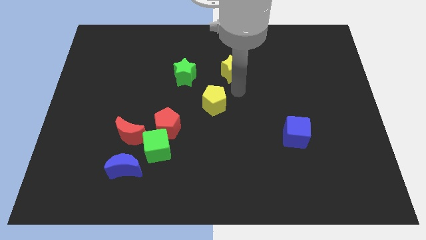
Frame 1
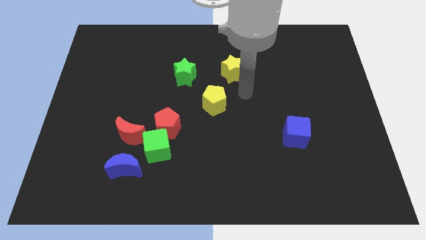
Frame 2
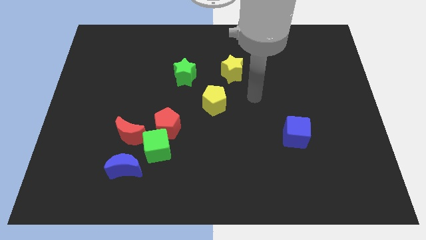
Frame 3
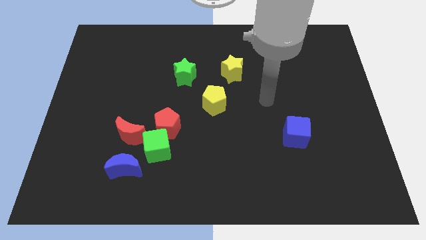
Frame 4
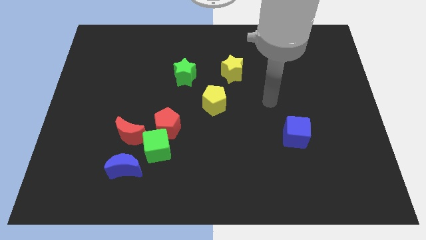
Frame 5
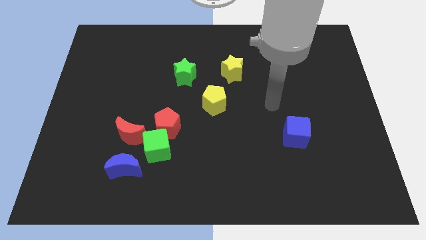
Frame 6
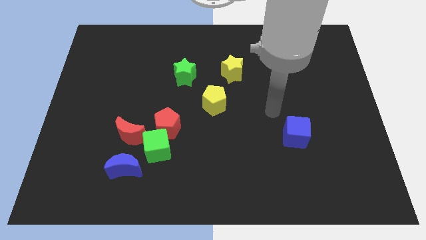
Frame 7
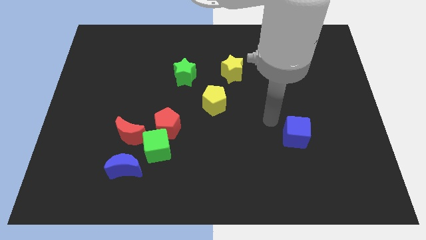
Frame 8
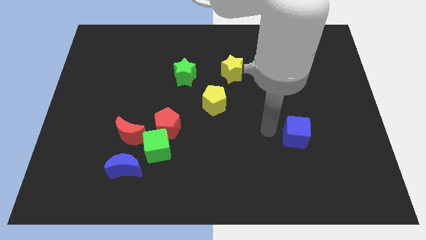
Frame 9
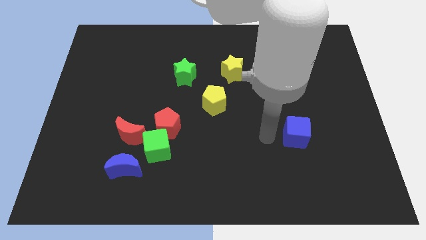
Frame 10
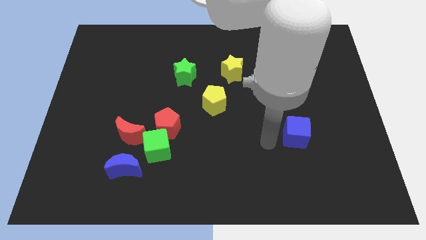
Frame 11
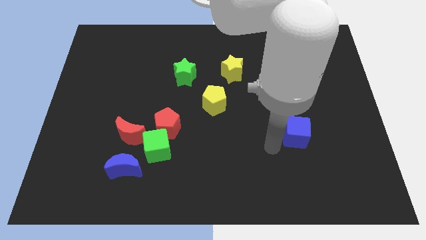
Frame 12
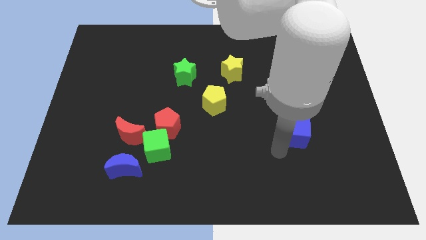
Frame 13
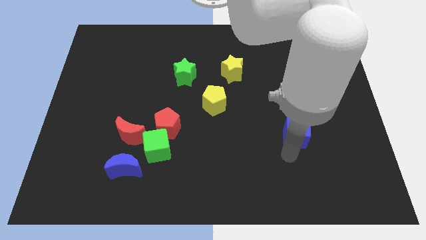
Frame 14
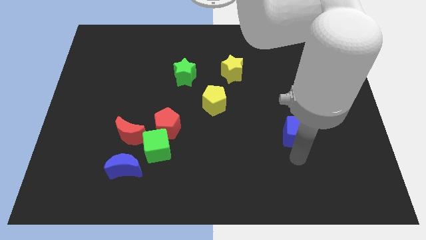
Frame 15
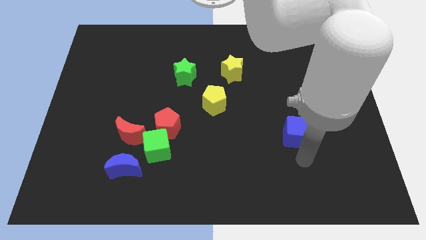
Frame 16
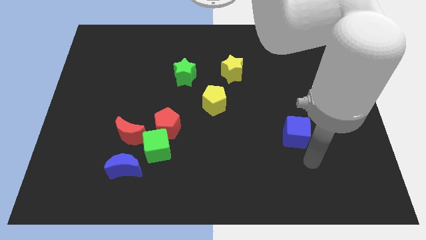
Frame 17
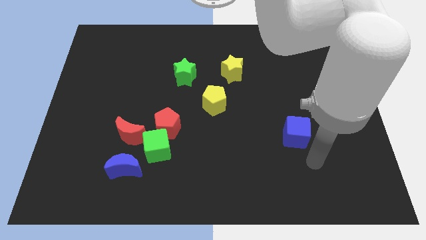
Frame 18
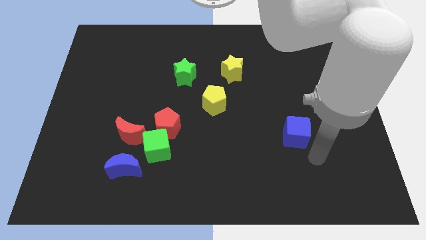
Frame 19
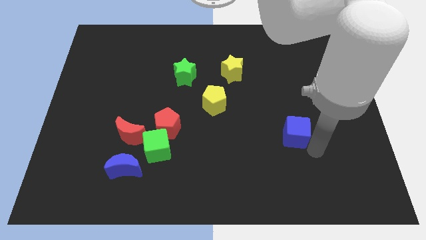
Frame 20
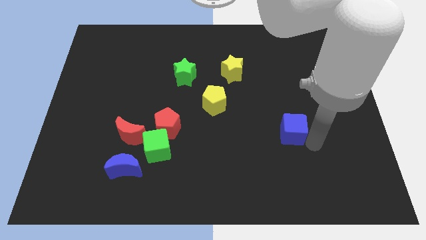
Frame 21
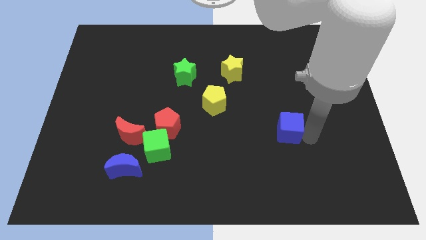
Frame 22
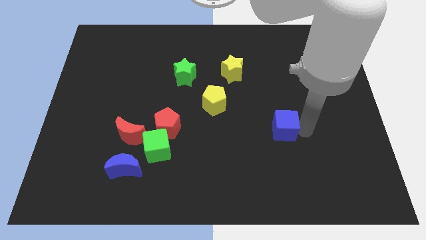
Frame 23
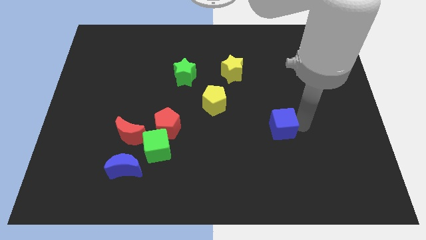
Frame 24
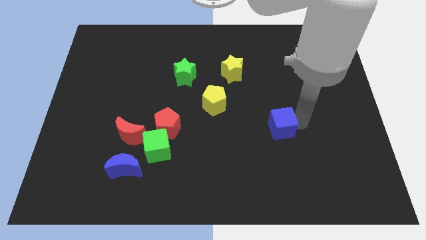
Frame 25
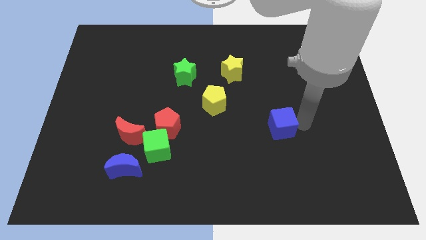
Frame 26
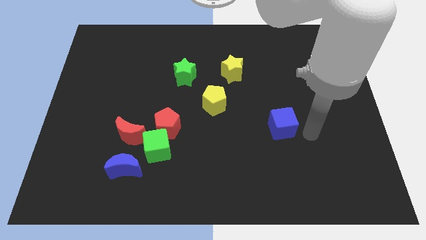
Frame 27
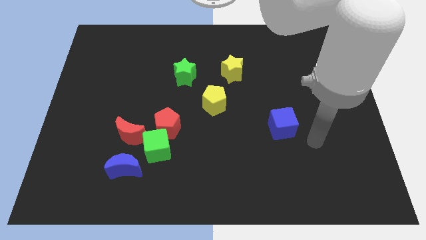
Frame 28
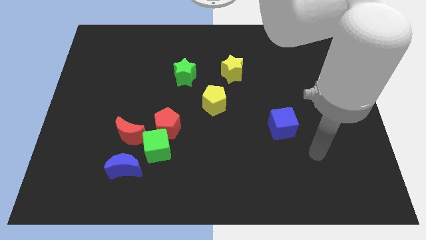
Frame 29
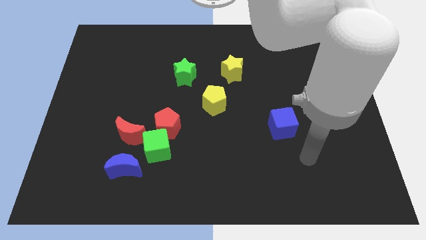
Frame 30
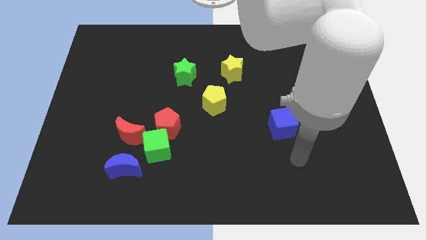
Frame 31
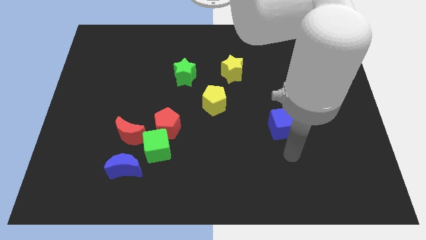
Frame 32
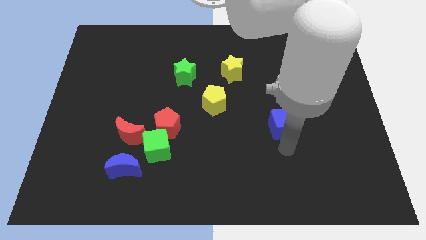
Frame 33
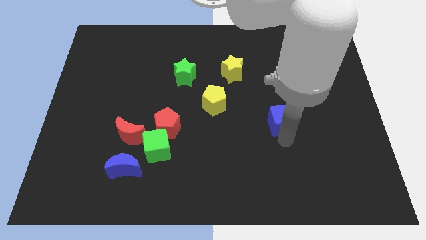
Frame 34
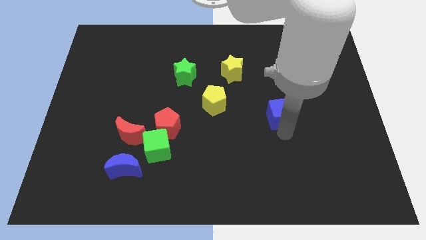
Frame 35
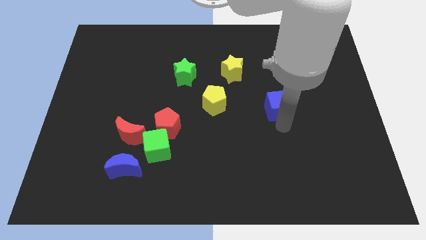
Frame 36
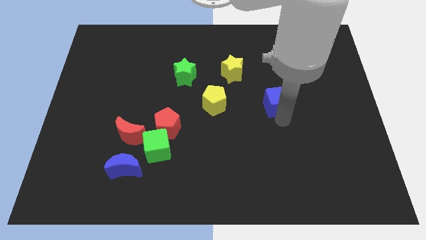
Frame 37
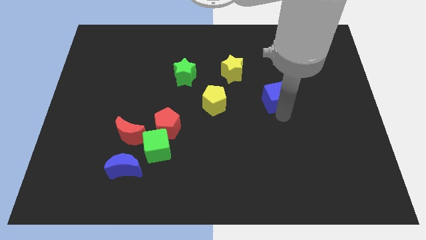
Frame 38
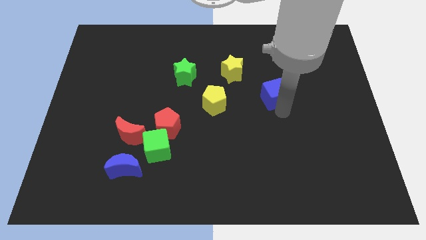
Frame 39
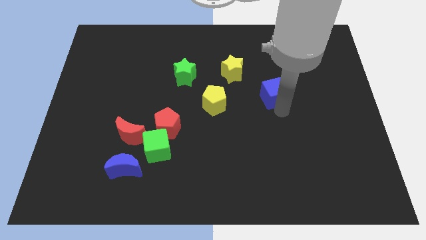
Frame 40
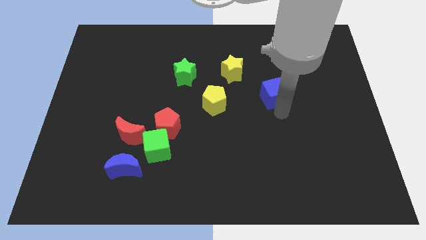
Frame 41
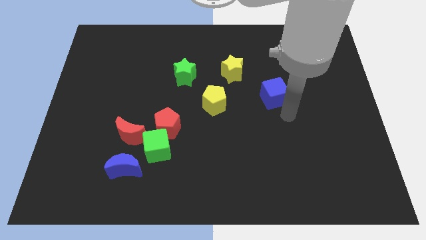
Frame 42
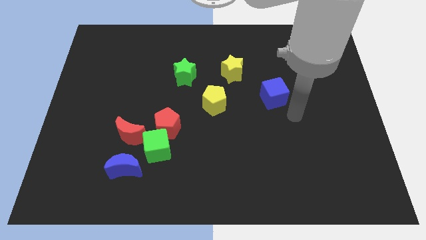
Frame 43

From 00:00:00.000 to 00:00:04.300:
place the blue cube right to the yellow pentagon

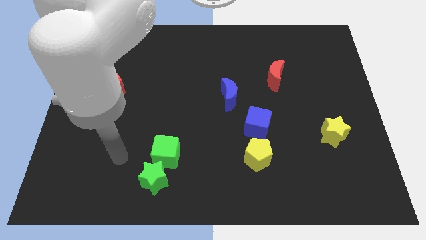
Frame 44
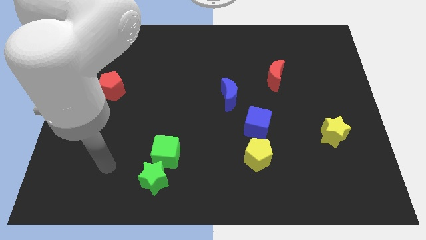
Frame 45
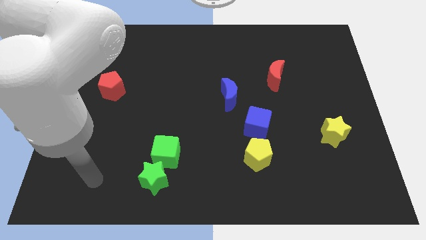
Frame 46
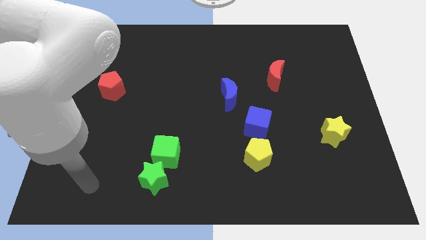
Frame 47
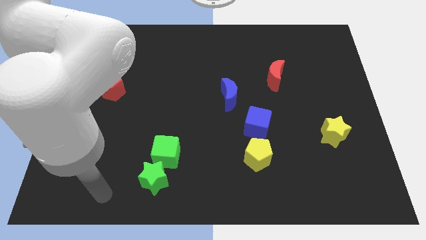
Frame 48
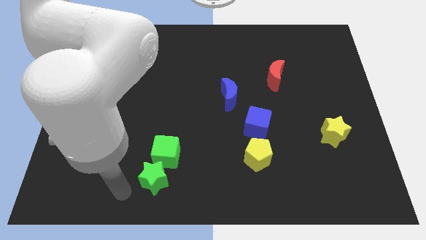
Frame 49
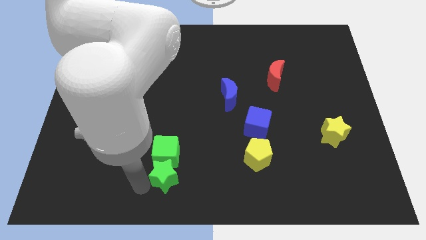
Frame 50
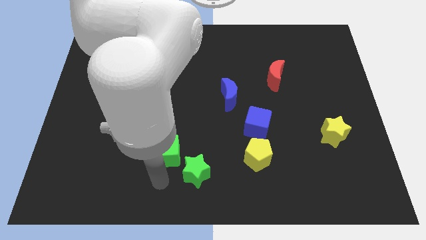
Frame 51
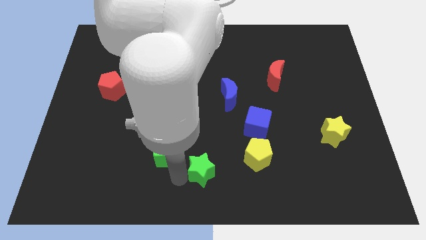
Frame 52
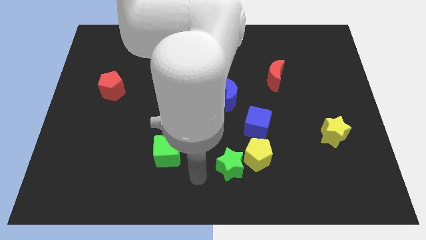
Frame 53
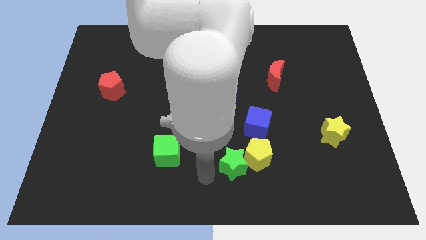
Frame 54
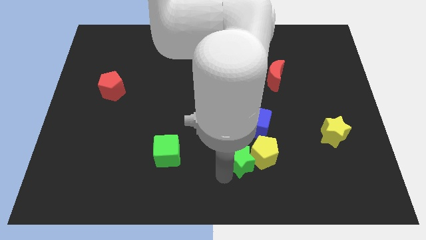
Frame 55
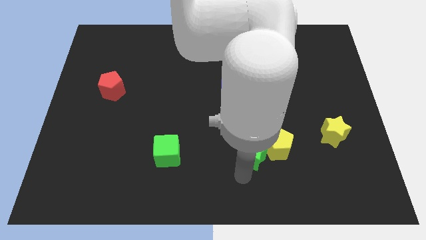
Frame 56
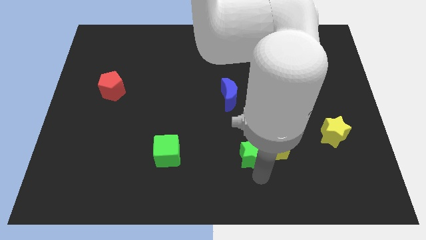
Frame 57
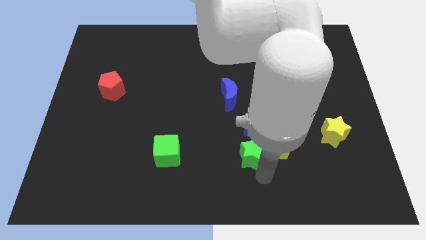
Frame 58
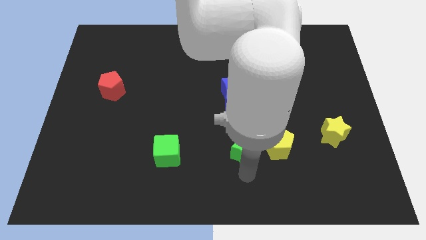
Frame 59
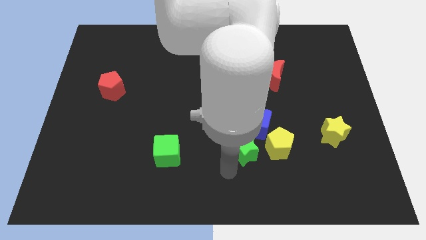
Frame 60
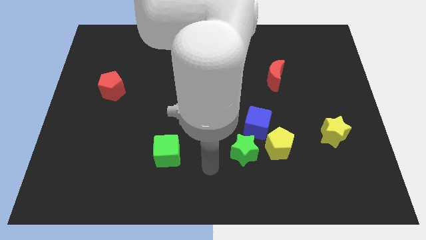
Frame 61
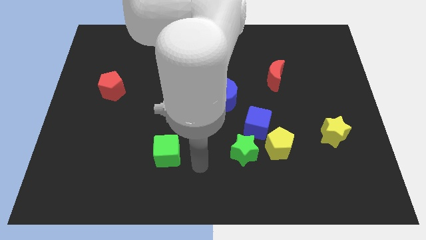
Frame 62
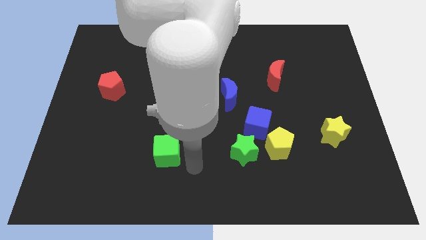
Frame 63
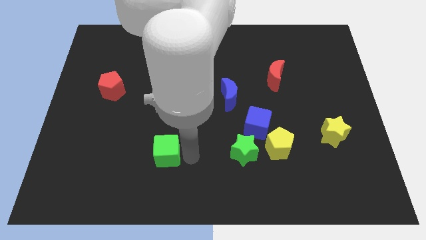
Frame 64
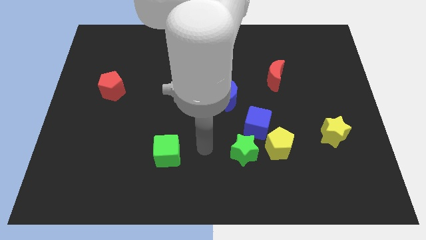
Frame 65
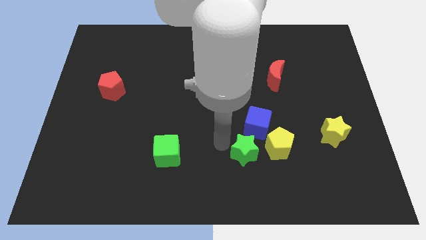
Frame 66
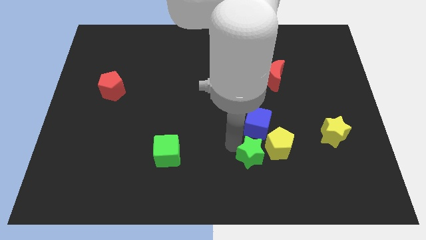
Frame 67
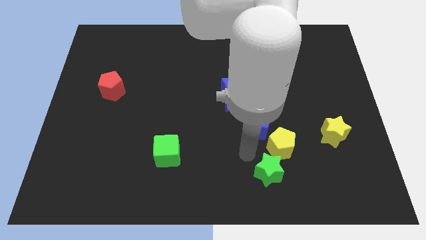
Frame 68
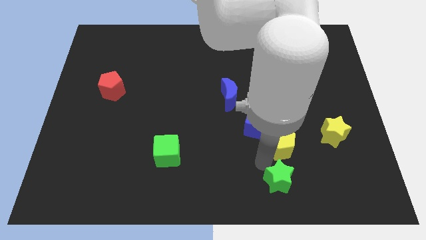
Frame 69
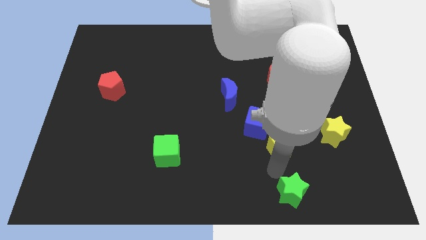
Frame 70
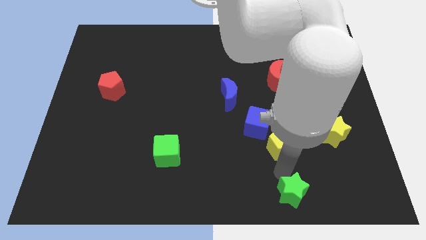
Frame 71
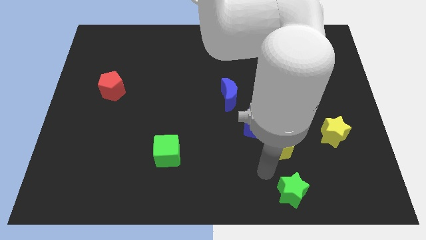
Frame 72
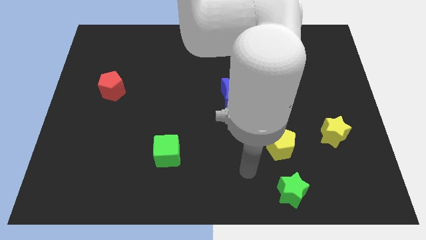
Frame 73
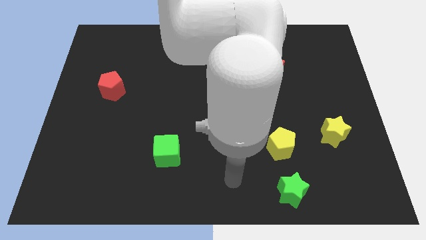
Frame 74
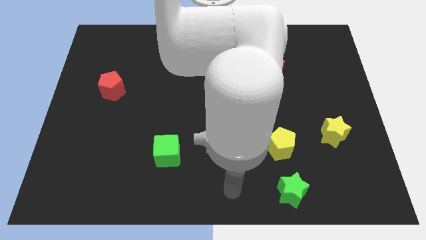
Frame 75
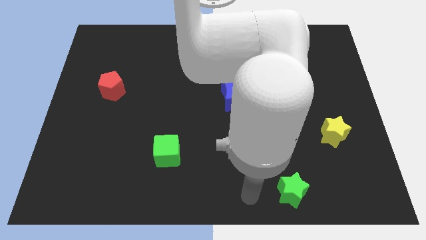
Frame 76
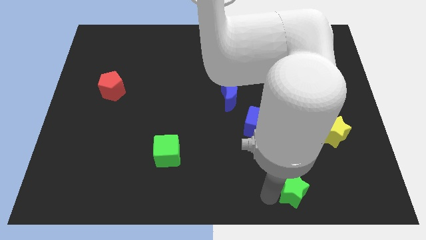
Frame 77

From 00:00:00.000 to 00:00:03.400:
move the green star towards bottom right side of the board

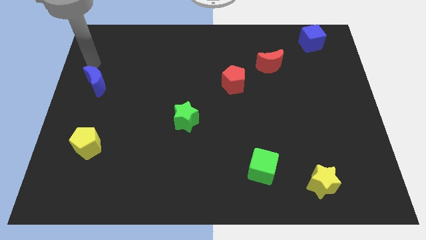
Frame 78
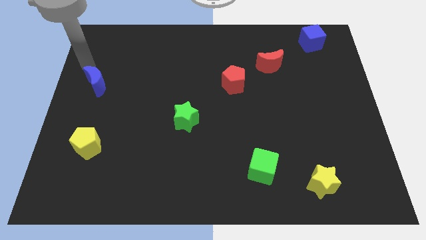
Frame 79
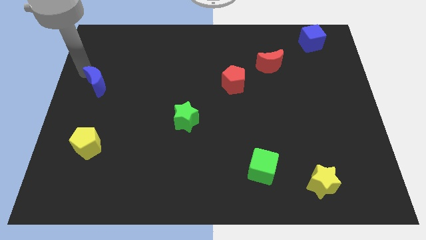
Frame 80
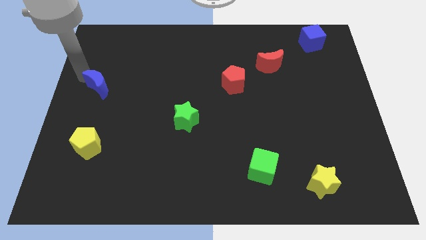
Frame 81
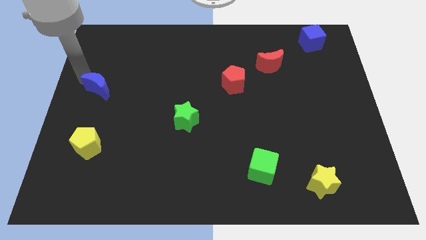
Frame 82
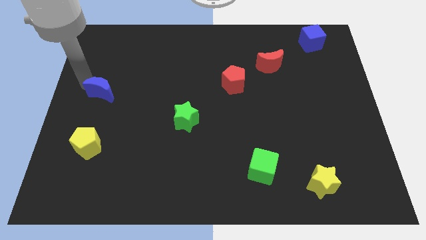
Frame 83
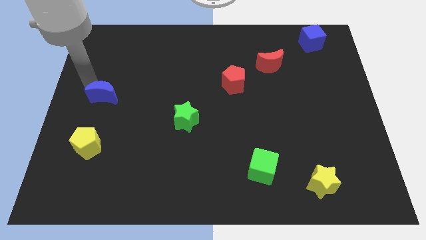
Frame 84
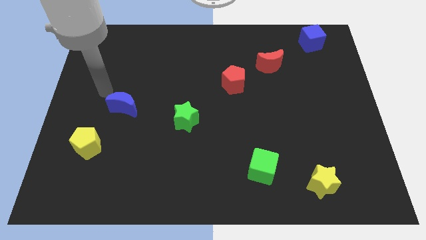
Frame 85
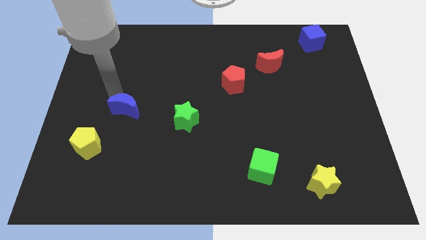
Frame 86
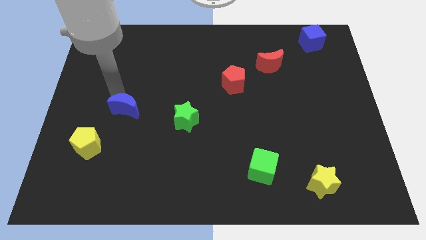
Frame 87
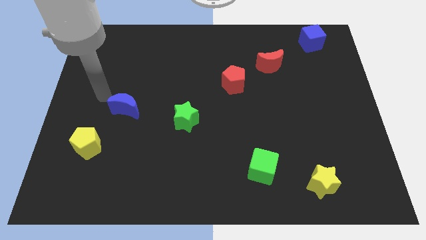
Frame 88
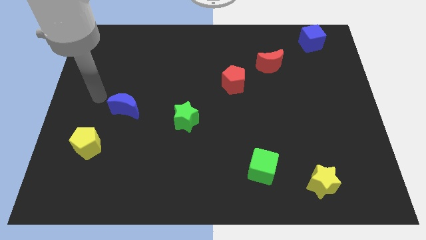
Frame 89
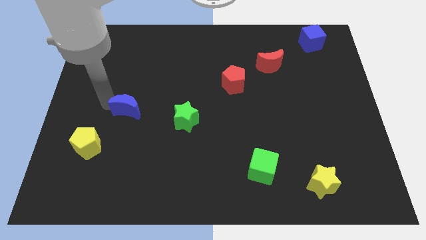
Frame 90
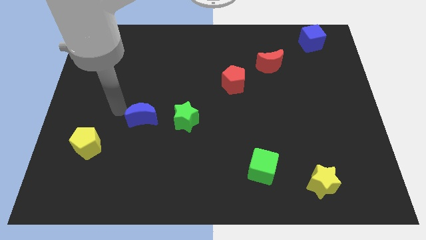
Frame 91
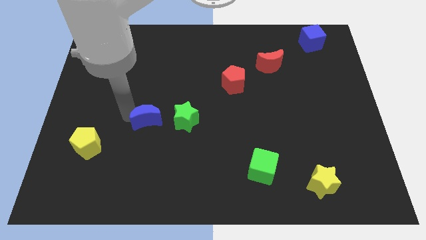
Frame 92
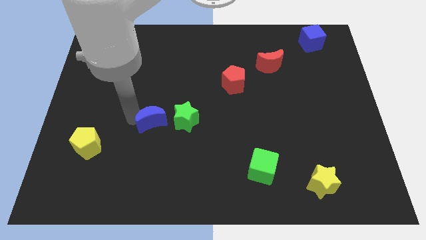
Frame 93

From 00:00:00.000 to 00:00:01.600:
push the blue moon towards the green star
